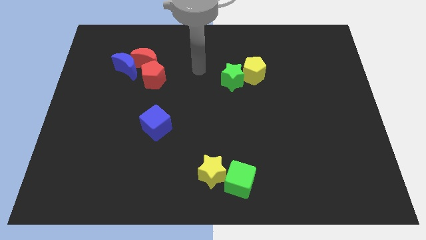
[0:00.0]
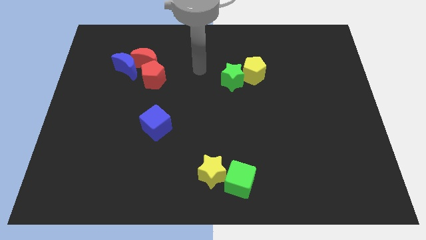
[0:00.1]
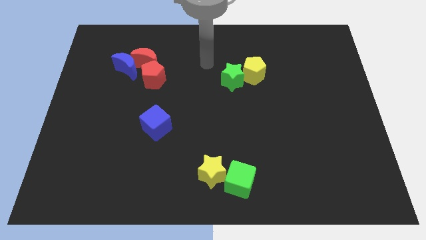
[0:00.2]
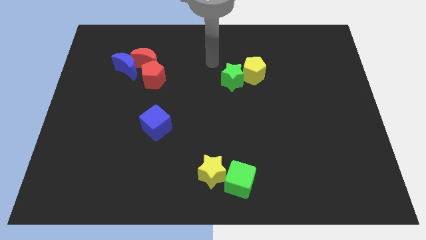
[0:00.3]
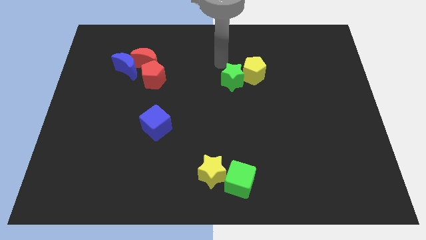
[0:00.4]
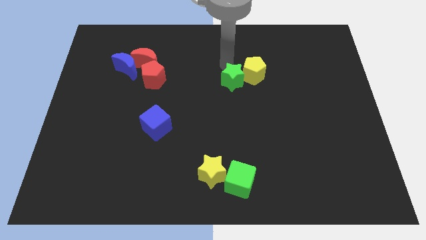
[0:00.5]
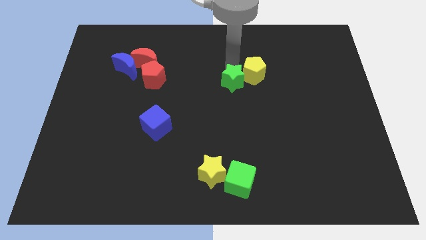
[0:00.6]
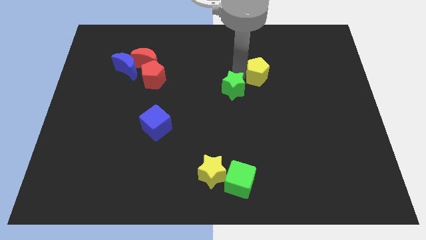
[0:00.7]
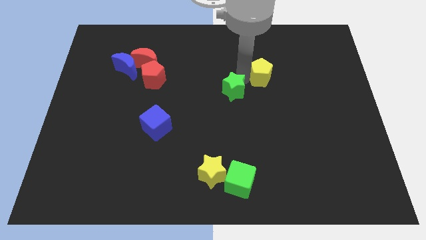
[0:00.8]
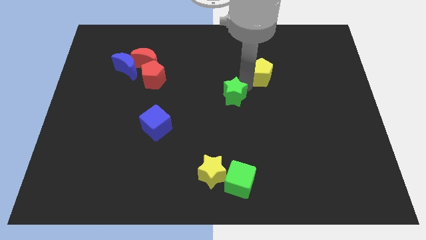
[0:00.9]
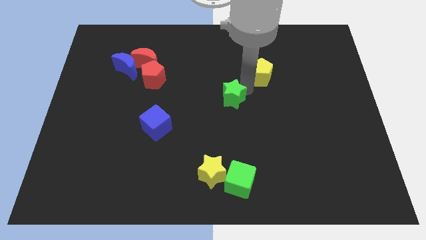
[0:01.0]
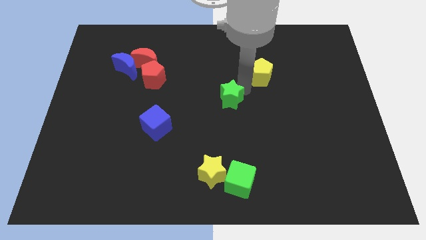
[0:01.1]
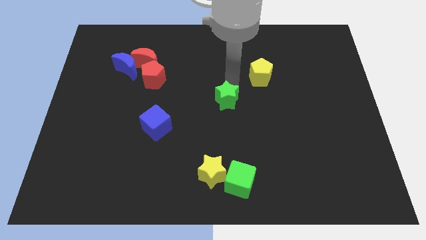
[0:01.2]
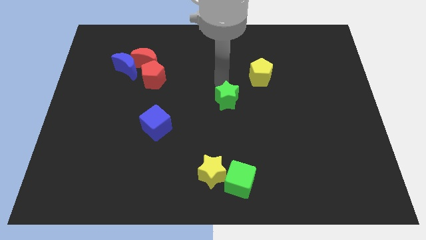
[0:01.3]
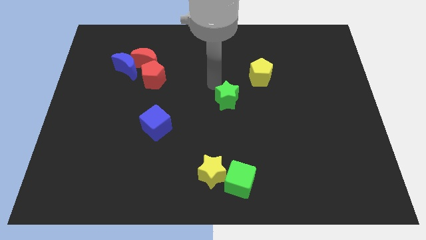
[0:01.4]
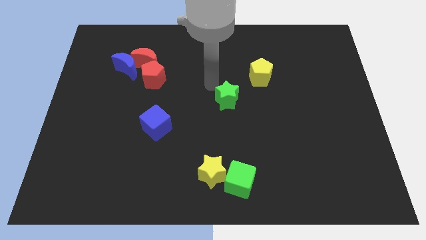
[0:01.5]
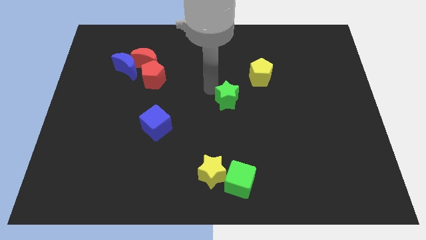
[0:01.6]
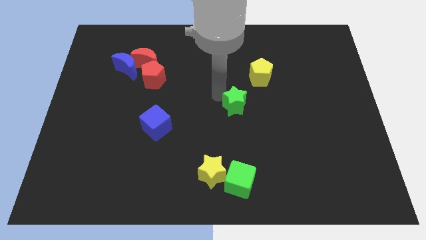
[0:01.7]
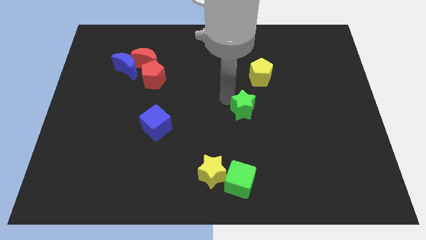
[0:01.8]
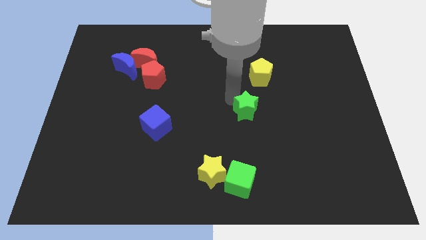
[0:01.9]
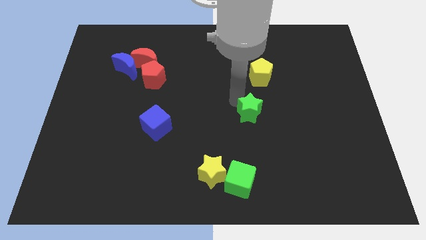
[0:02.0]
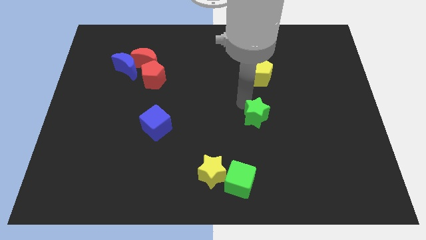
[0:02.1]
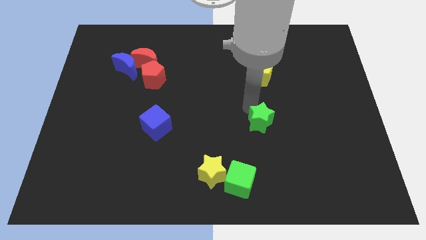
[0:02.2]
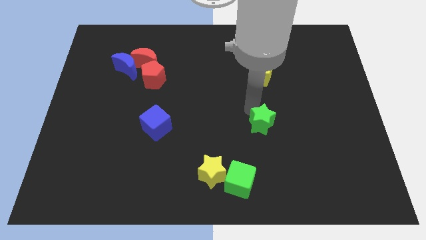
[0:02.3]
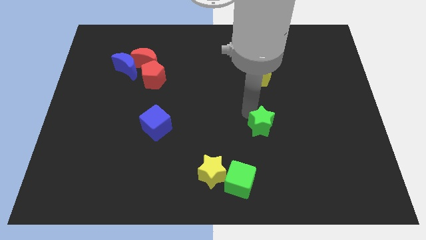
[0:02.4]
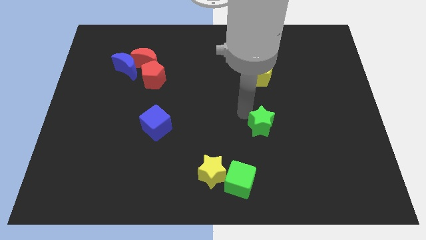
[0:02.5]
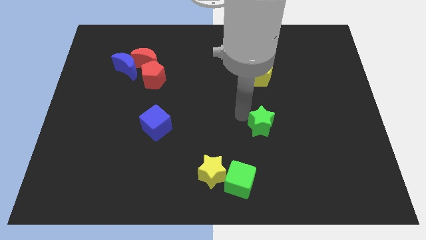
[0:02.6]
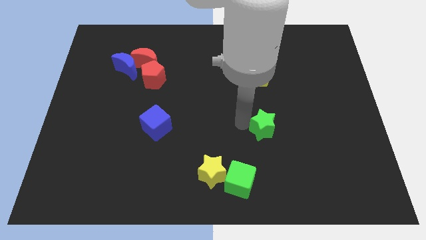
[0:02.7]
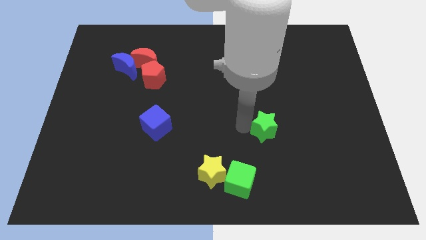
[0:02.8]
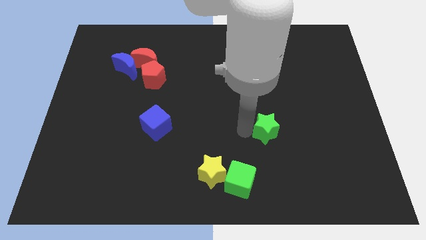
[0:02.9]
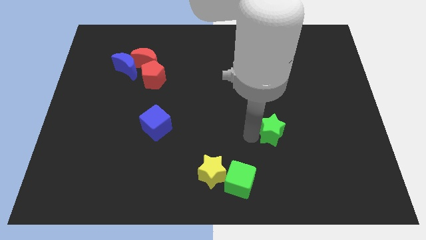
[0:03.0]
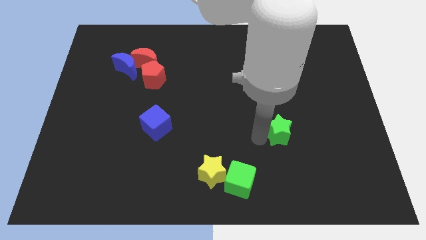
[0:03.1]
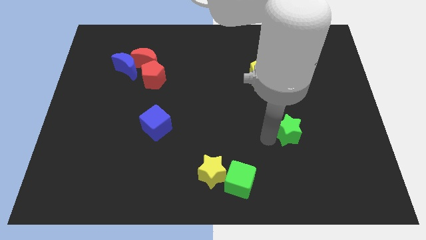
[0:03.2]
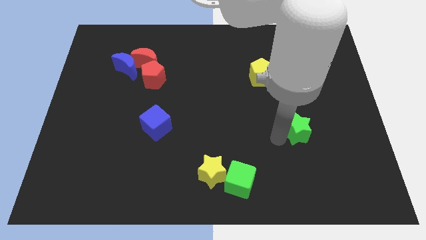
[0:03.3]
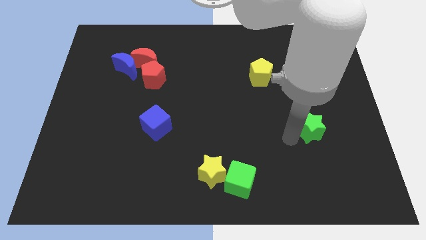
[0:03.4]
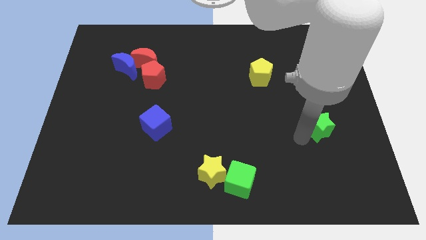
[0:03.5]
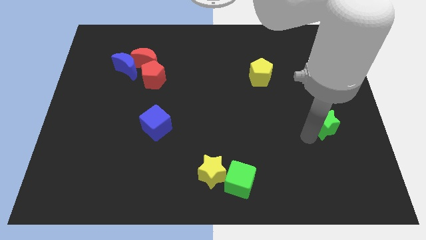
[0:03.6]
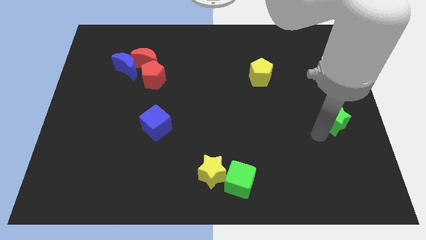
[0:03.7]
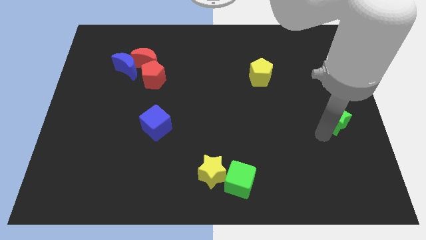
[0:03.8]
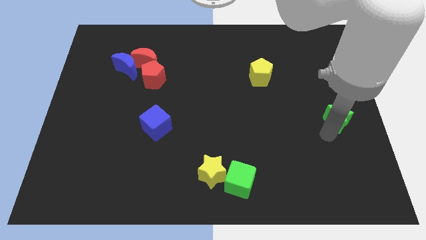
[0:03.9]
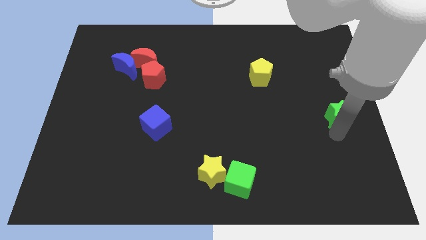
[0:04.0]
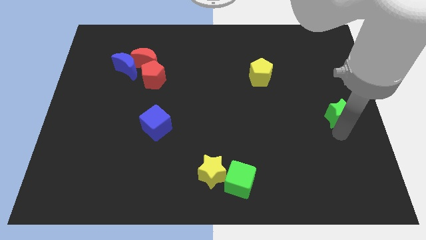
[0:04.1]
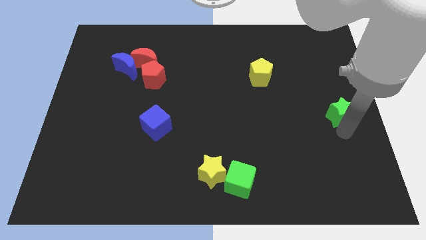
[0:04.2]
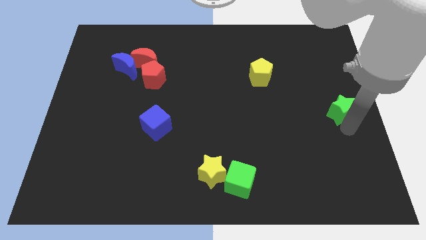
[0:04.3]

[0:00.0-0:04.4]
move the green star to the right center of the board

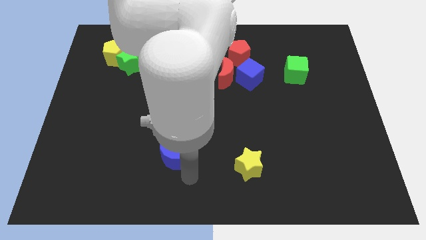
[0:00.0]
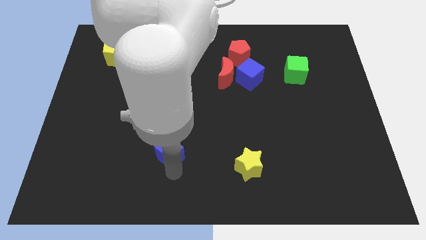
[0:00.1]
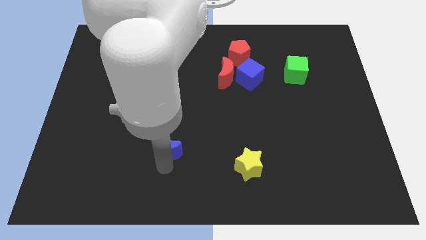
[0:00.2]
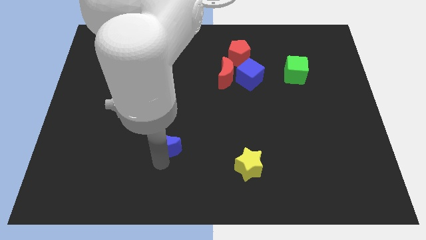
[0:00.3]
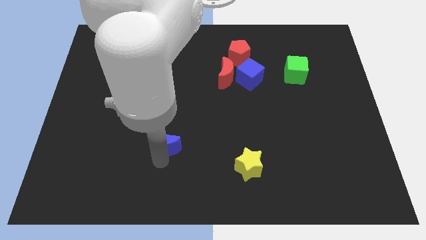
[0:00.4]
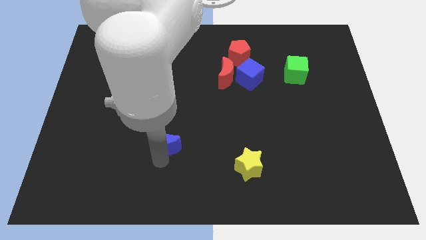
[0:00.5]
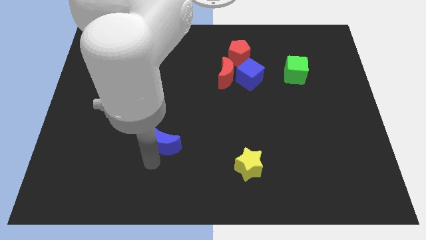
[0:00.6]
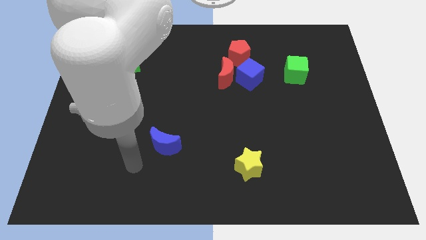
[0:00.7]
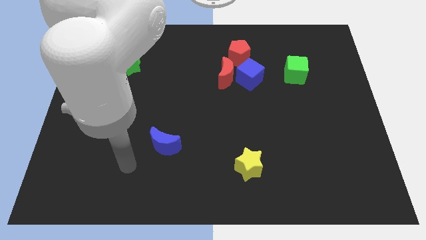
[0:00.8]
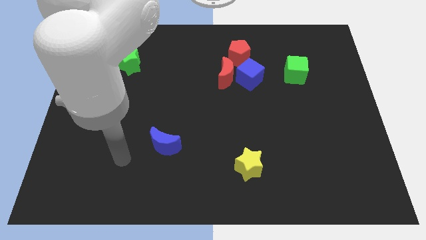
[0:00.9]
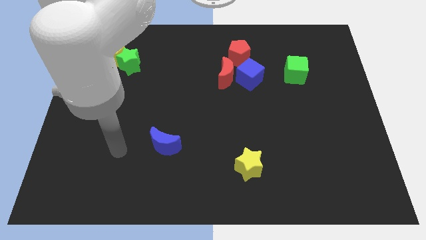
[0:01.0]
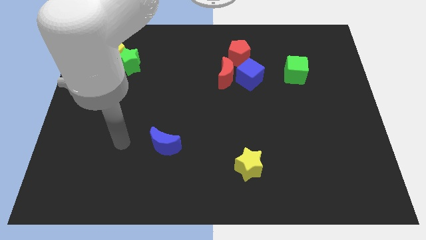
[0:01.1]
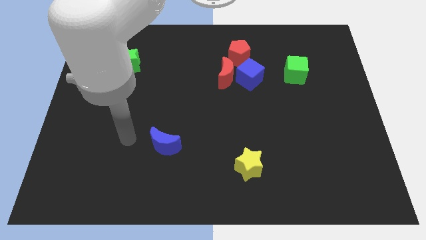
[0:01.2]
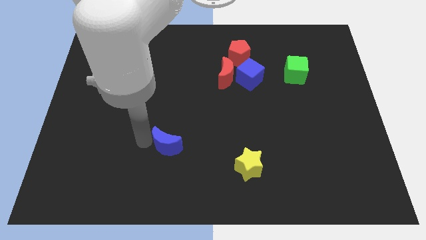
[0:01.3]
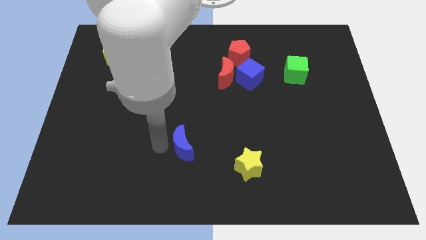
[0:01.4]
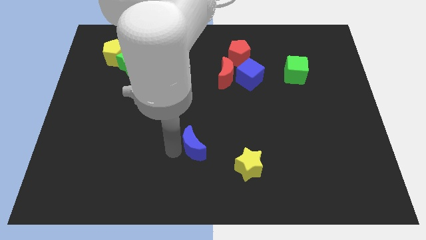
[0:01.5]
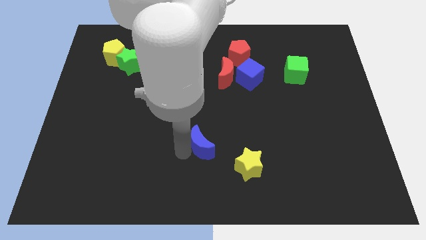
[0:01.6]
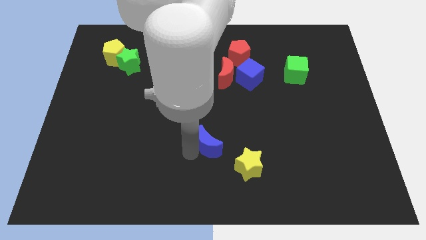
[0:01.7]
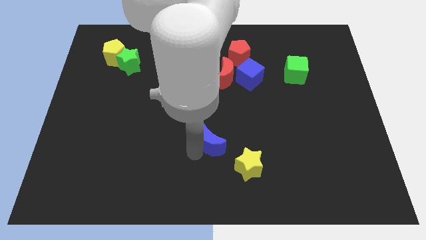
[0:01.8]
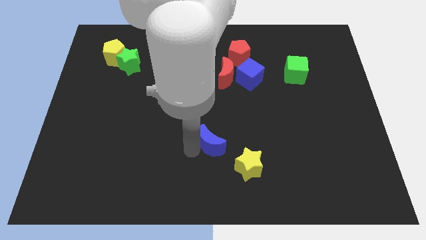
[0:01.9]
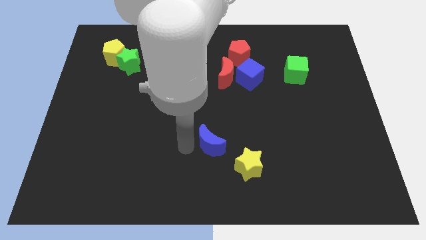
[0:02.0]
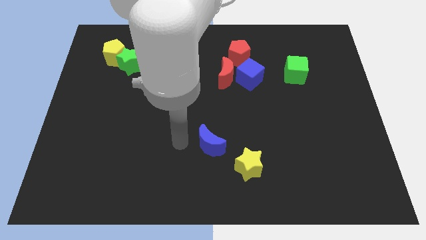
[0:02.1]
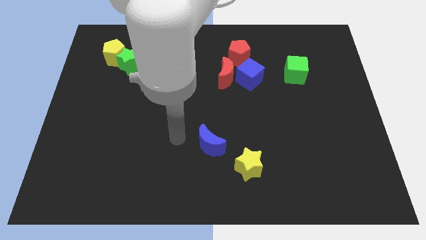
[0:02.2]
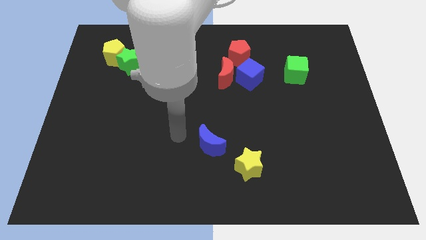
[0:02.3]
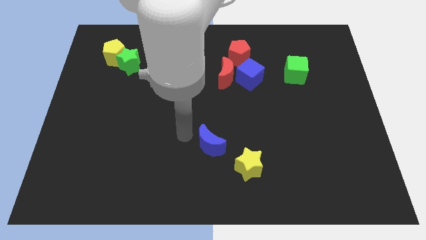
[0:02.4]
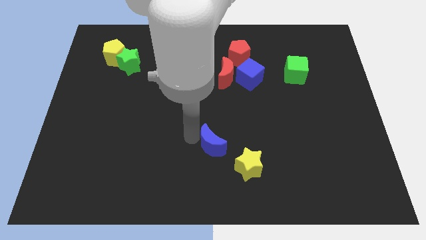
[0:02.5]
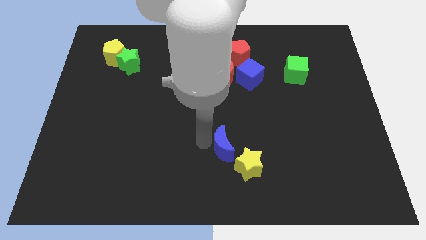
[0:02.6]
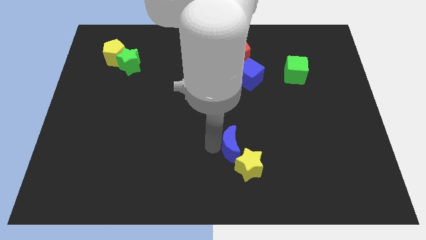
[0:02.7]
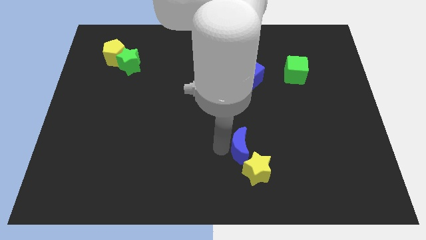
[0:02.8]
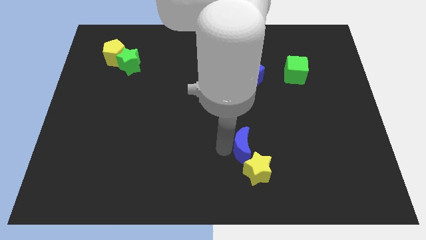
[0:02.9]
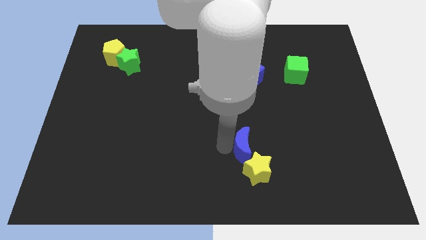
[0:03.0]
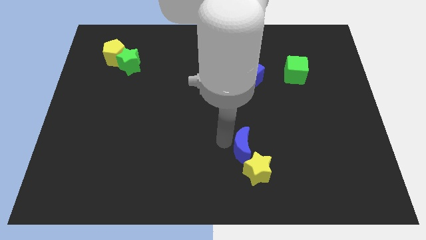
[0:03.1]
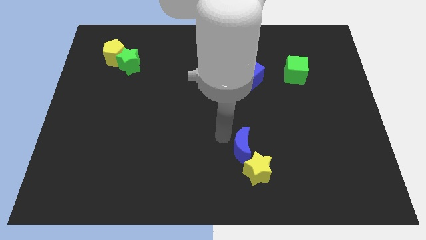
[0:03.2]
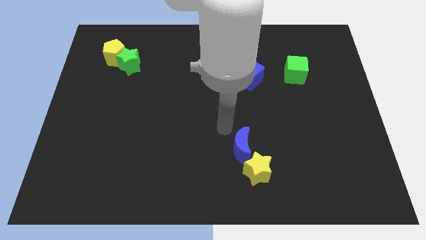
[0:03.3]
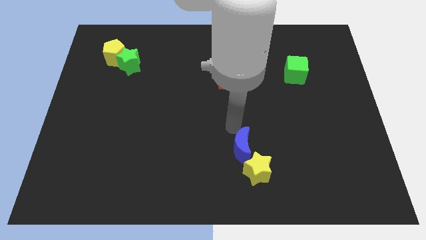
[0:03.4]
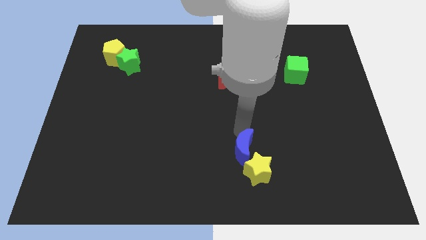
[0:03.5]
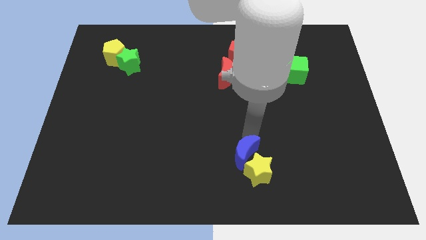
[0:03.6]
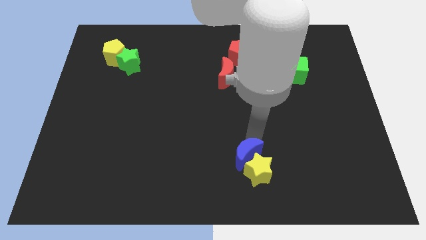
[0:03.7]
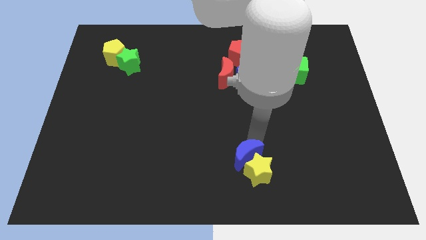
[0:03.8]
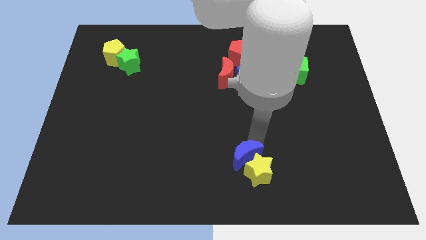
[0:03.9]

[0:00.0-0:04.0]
push the blue crescent into the yellow star

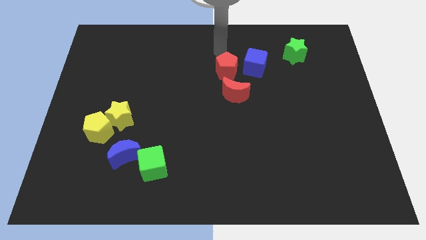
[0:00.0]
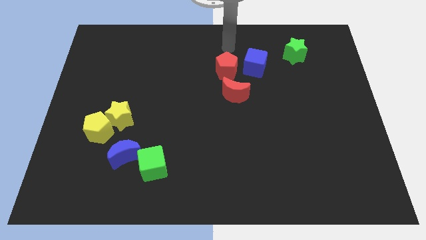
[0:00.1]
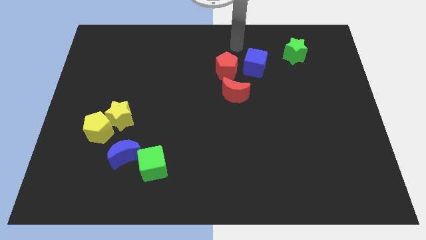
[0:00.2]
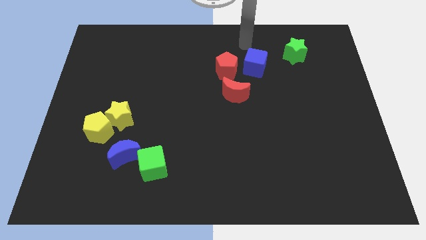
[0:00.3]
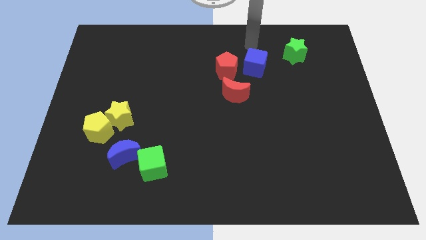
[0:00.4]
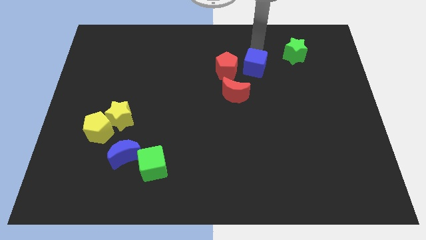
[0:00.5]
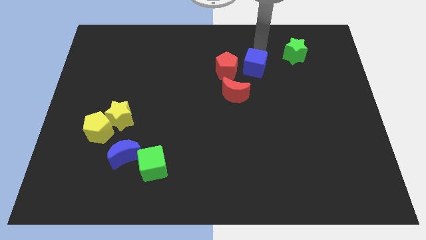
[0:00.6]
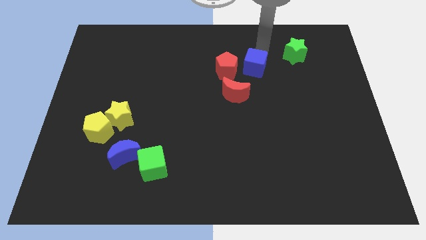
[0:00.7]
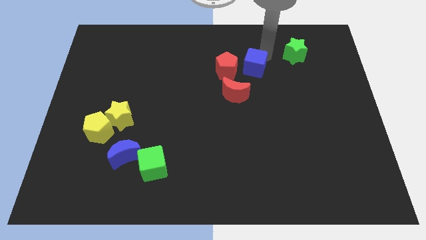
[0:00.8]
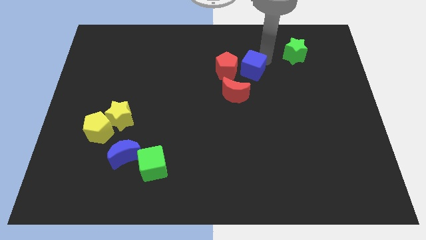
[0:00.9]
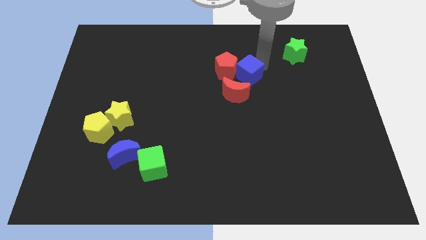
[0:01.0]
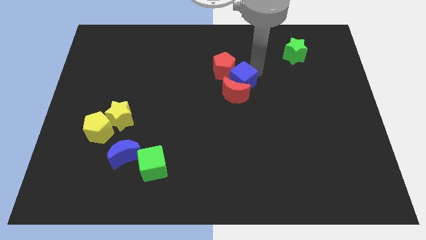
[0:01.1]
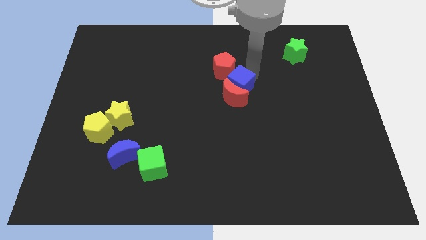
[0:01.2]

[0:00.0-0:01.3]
push blue cube in to red crescent
